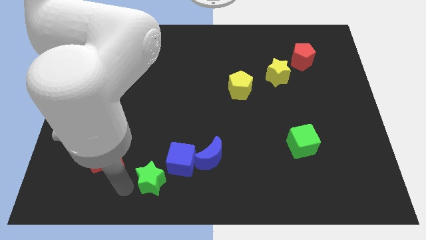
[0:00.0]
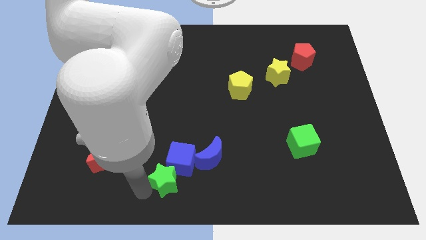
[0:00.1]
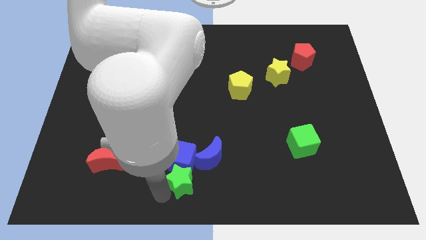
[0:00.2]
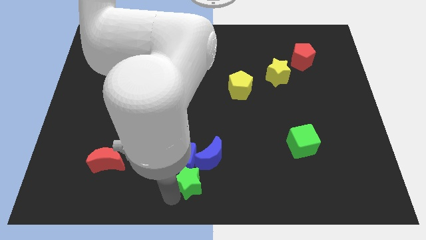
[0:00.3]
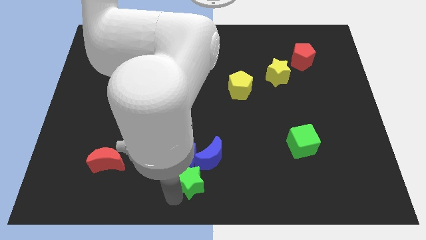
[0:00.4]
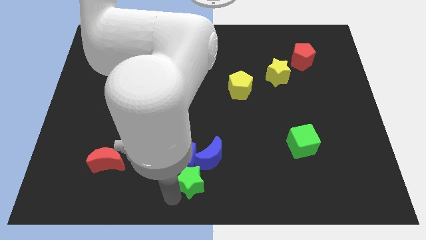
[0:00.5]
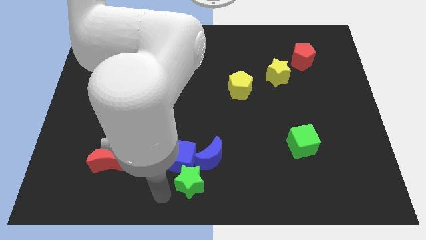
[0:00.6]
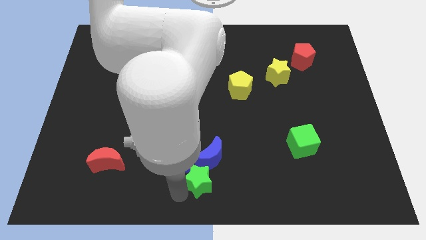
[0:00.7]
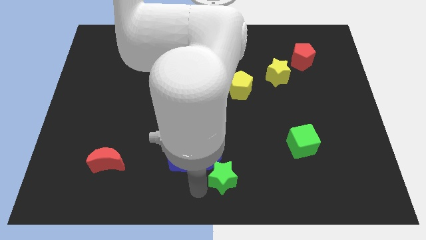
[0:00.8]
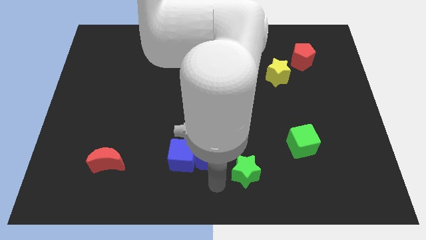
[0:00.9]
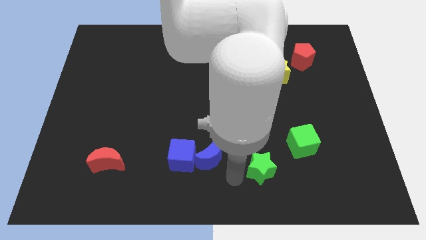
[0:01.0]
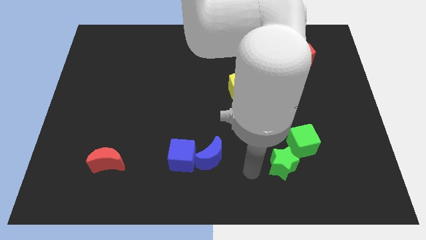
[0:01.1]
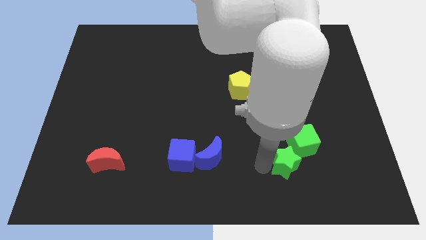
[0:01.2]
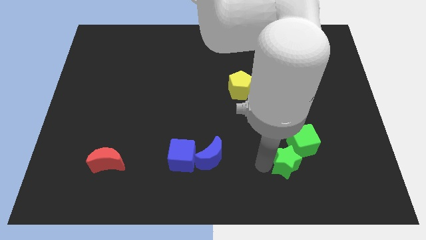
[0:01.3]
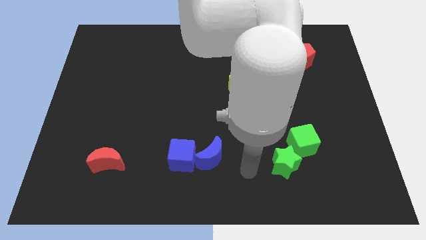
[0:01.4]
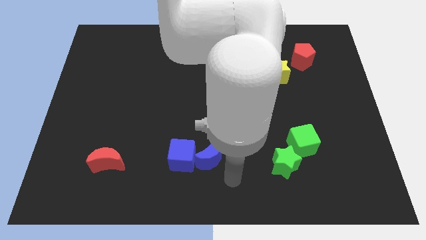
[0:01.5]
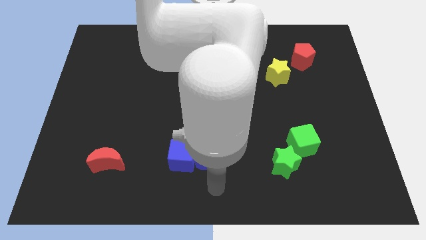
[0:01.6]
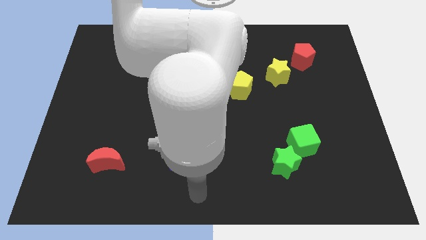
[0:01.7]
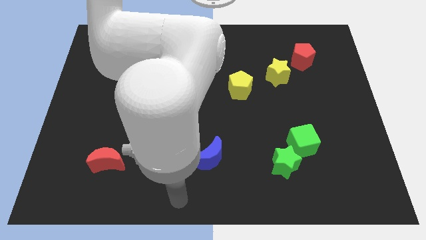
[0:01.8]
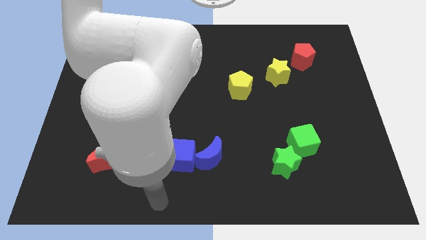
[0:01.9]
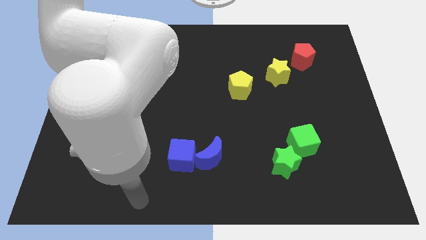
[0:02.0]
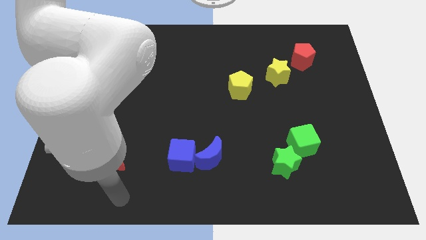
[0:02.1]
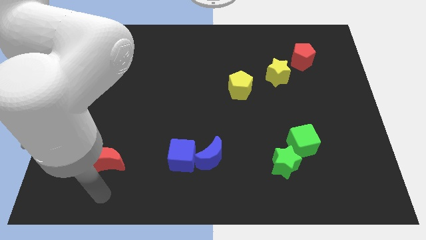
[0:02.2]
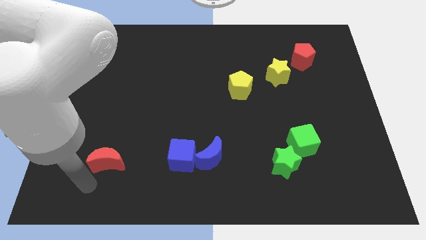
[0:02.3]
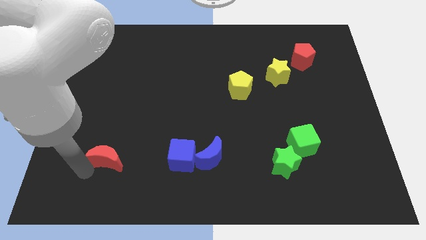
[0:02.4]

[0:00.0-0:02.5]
place the arm down to the red moon

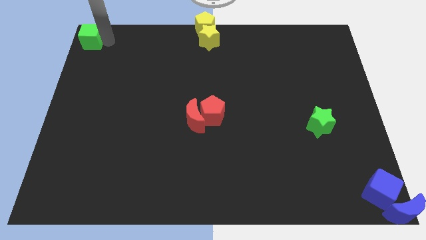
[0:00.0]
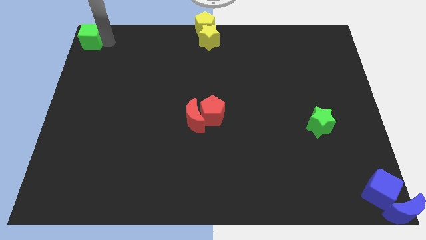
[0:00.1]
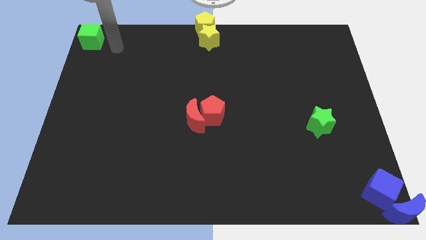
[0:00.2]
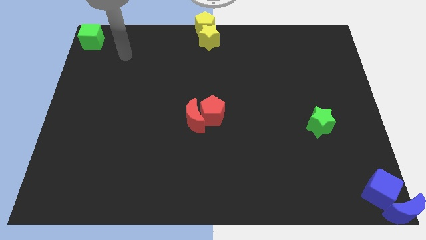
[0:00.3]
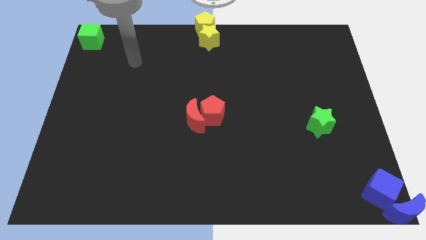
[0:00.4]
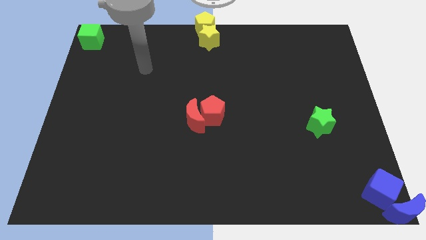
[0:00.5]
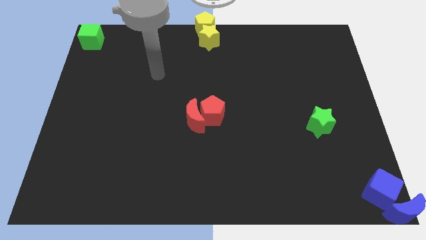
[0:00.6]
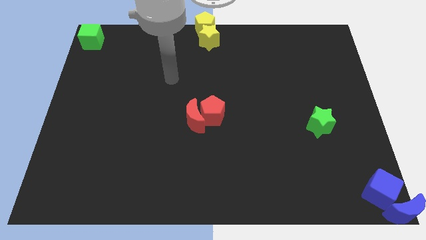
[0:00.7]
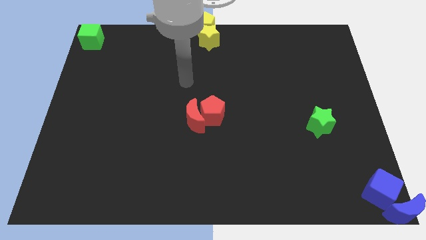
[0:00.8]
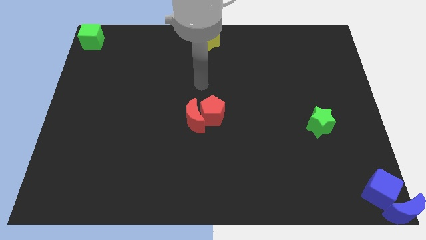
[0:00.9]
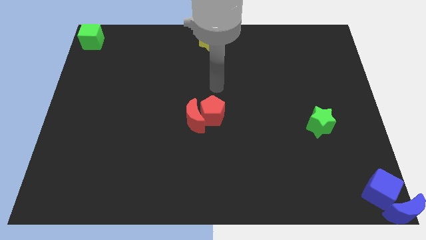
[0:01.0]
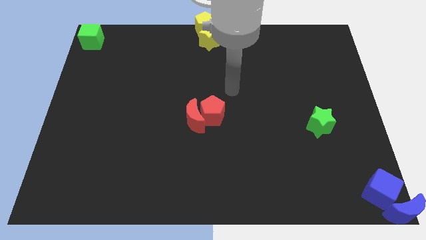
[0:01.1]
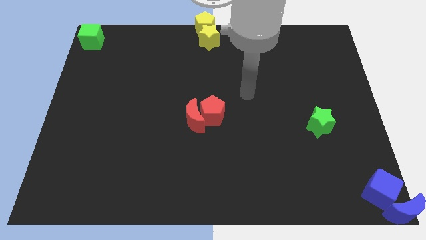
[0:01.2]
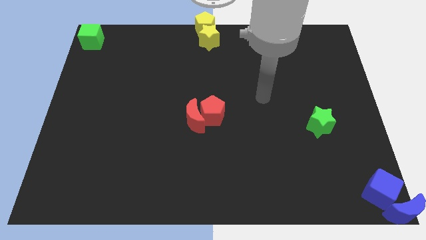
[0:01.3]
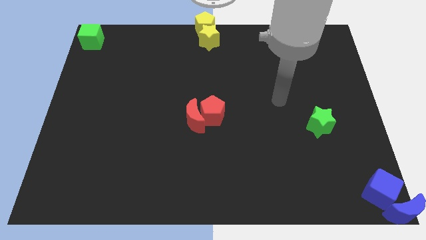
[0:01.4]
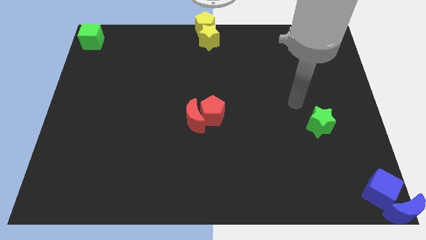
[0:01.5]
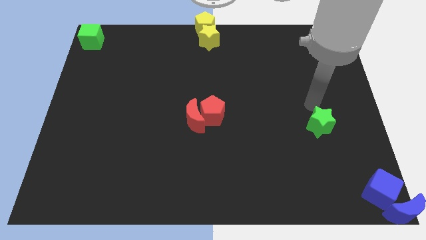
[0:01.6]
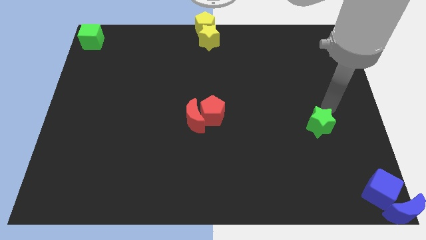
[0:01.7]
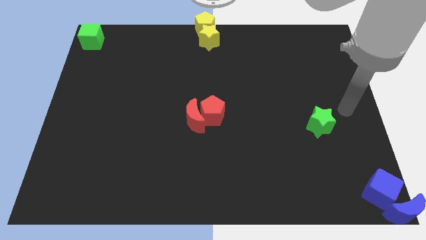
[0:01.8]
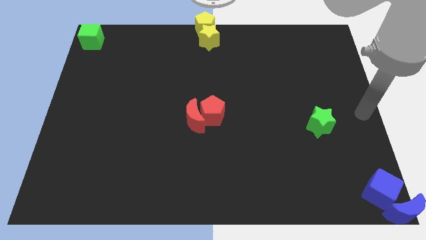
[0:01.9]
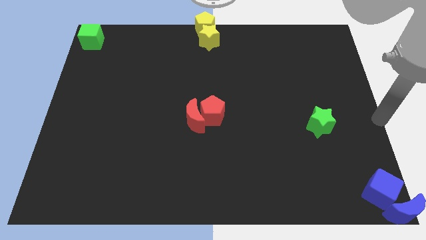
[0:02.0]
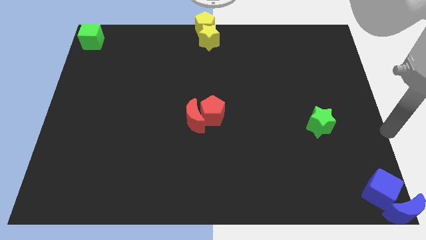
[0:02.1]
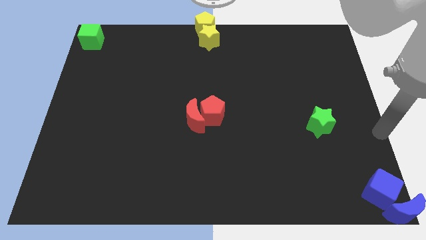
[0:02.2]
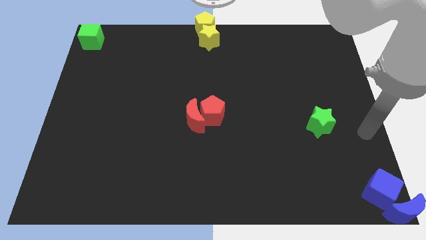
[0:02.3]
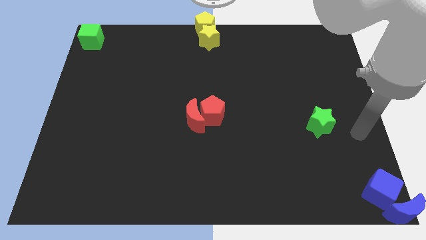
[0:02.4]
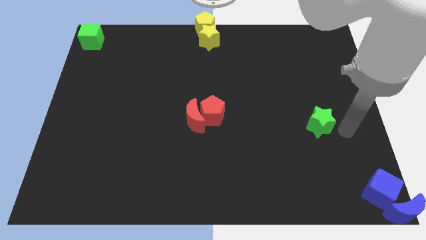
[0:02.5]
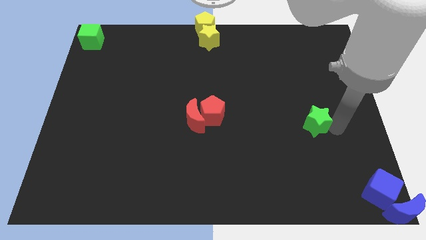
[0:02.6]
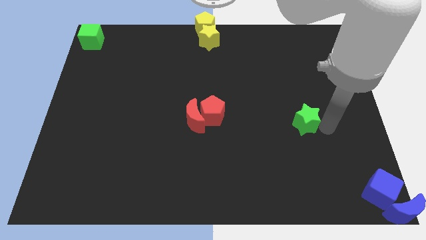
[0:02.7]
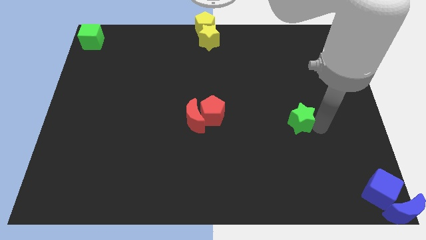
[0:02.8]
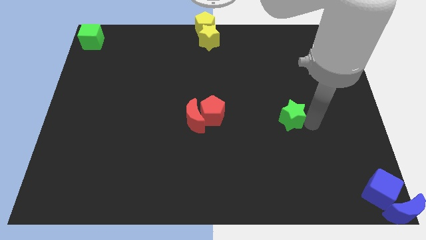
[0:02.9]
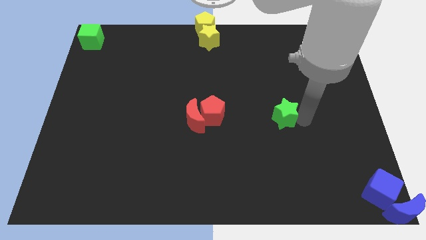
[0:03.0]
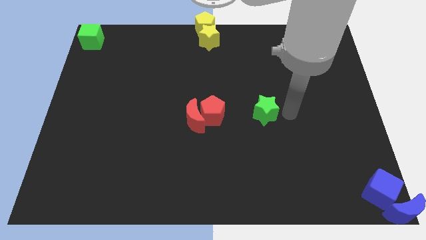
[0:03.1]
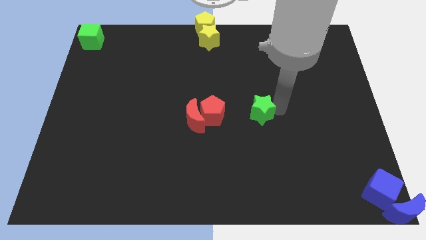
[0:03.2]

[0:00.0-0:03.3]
move the arm away from the green cube

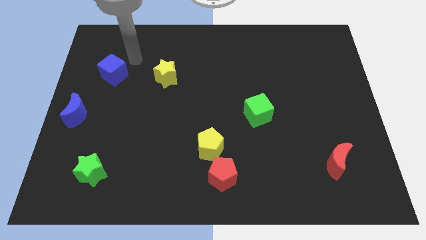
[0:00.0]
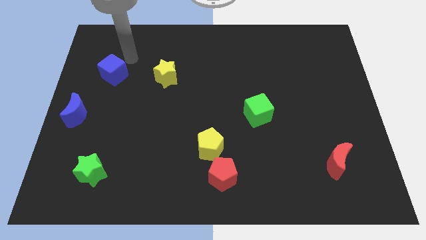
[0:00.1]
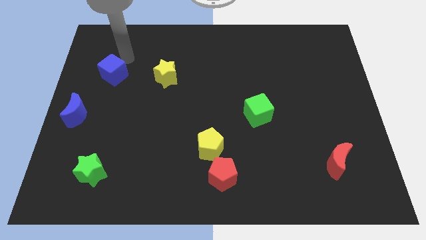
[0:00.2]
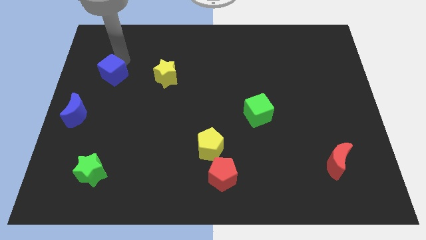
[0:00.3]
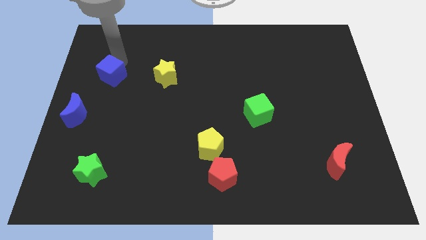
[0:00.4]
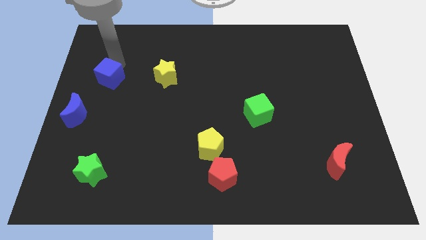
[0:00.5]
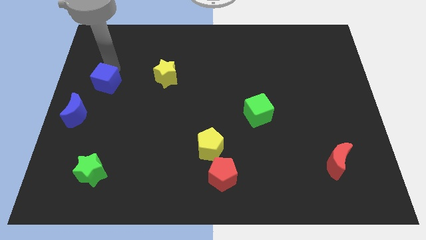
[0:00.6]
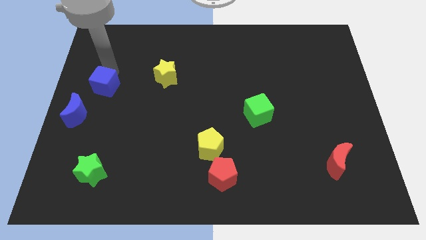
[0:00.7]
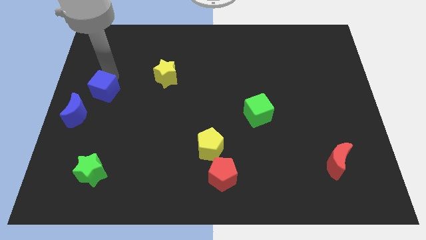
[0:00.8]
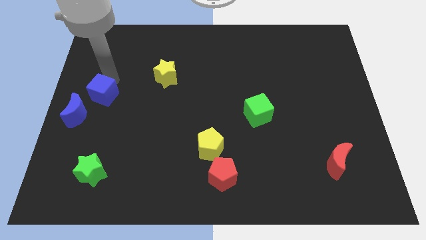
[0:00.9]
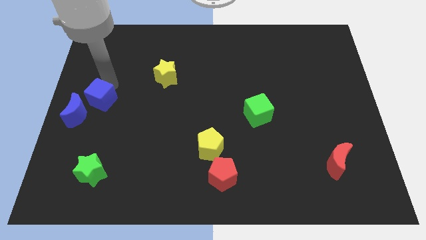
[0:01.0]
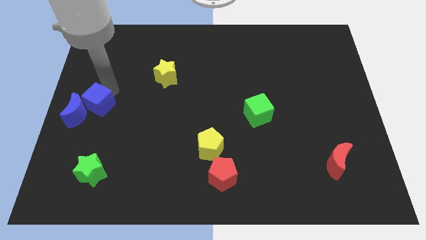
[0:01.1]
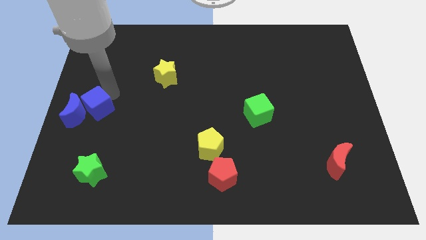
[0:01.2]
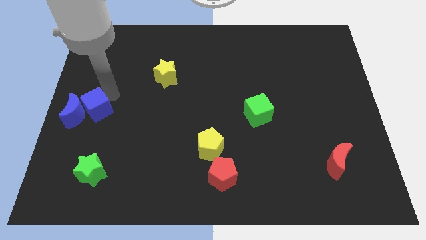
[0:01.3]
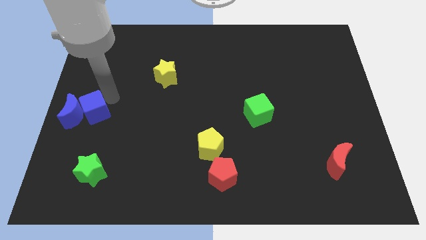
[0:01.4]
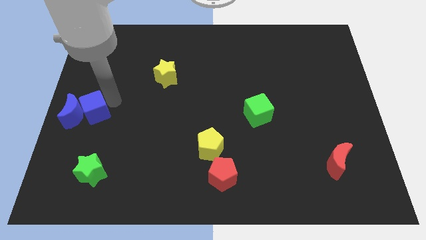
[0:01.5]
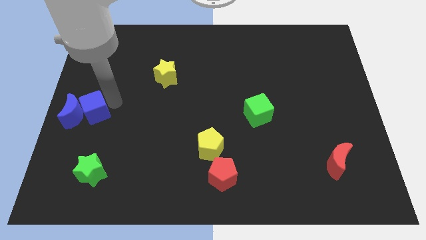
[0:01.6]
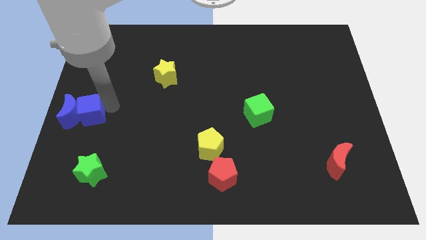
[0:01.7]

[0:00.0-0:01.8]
push the blue cube to the right of the blue crescent

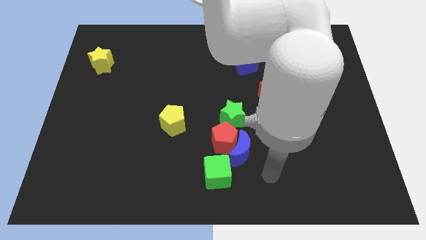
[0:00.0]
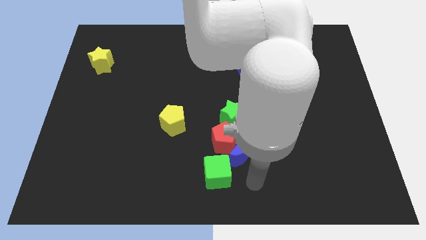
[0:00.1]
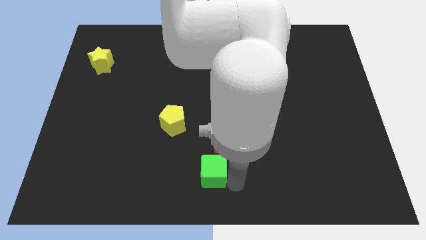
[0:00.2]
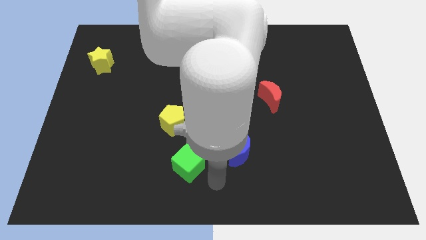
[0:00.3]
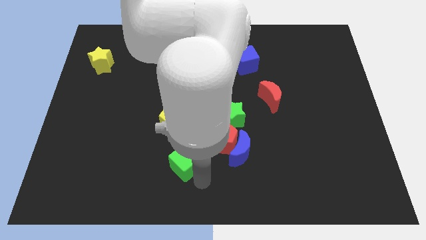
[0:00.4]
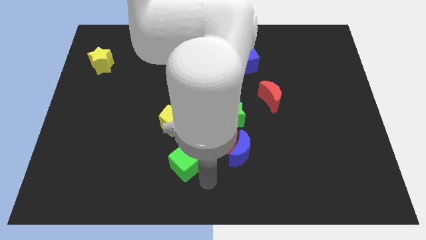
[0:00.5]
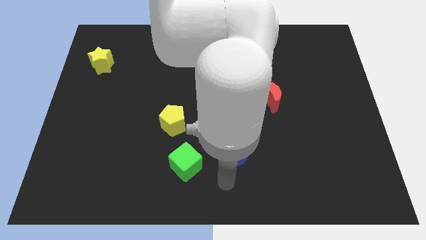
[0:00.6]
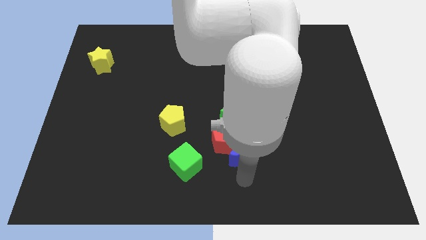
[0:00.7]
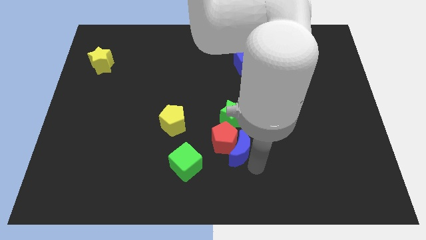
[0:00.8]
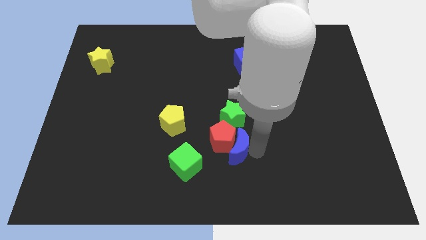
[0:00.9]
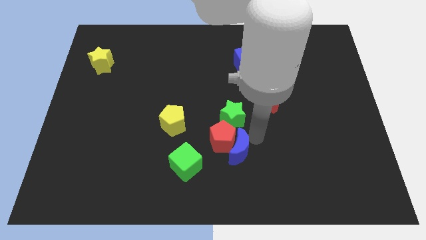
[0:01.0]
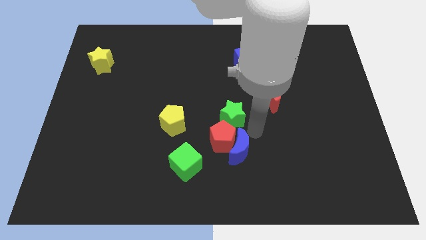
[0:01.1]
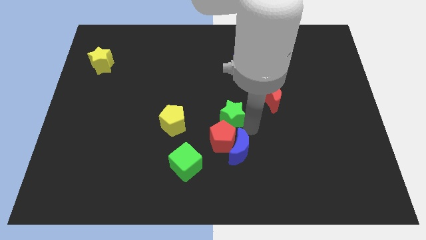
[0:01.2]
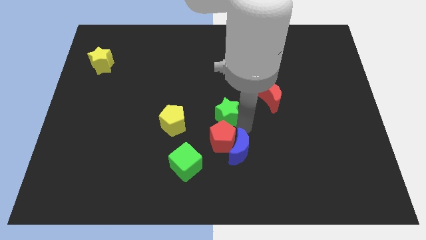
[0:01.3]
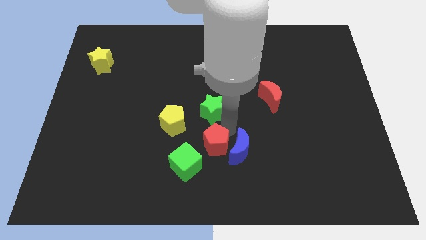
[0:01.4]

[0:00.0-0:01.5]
push green star above red pentagon
